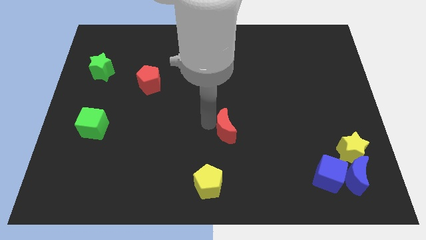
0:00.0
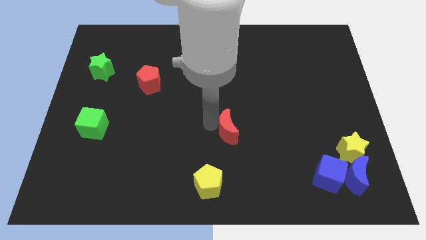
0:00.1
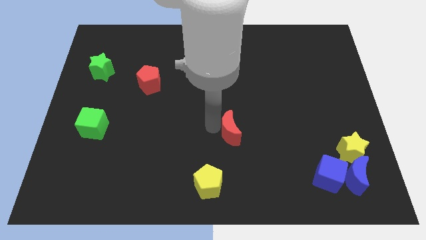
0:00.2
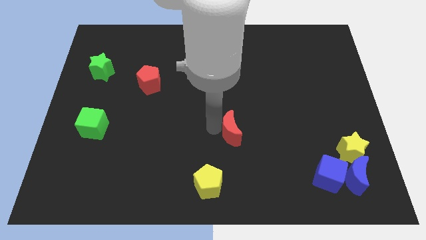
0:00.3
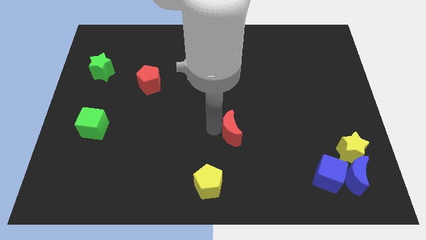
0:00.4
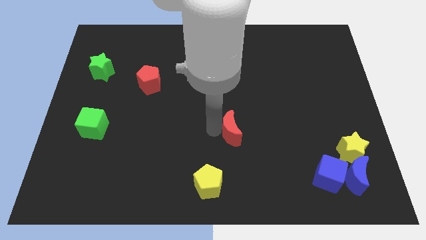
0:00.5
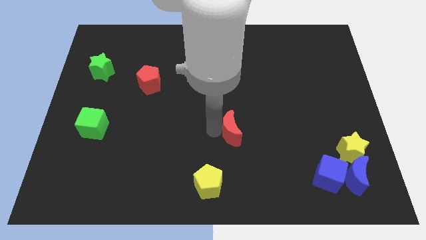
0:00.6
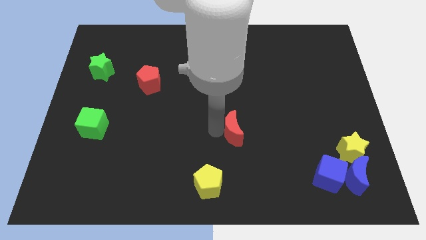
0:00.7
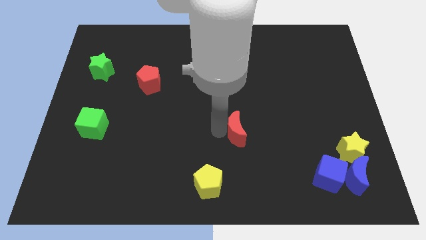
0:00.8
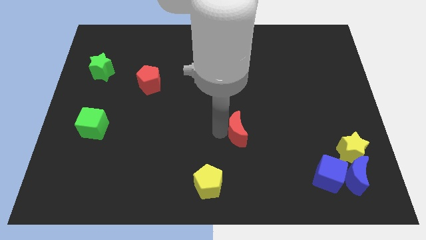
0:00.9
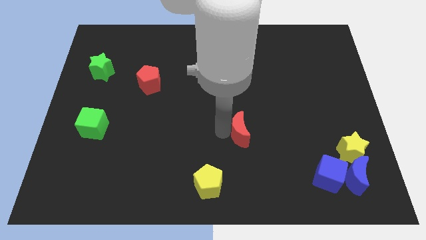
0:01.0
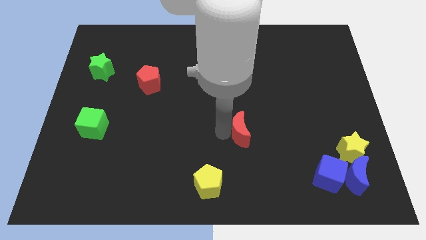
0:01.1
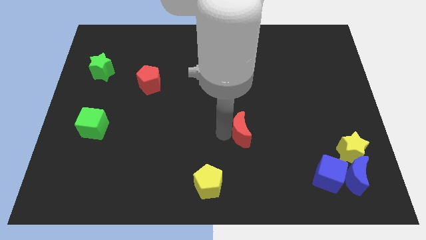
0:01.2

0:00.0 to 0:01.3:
place the red moon diagonally to the yellow pentagon

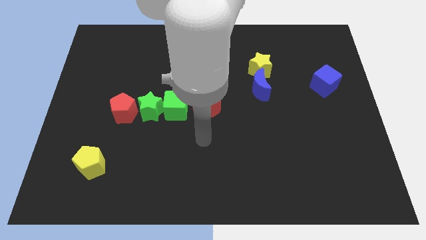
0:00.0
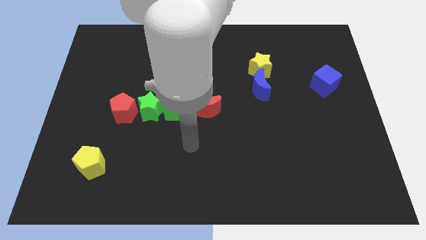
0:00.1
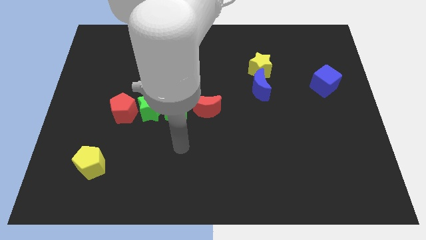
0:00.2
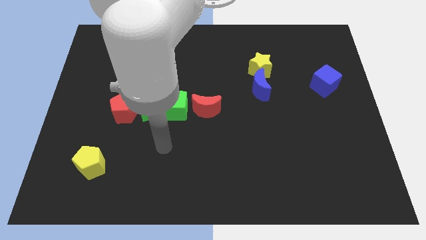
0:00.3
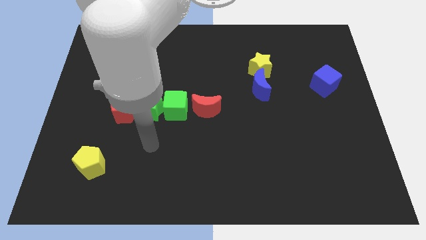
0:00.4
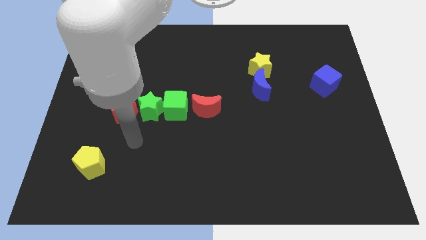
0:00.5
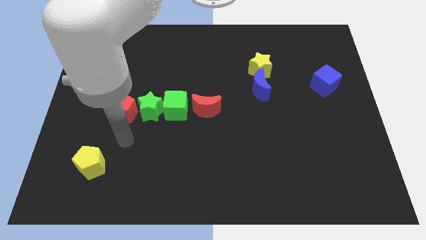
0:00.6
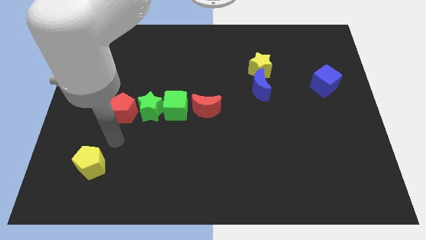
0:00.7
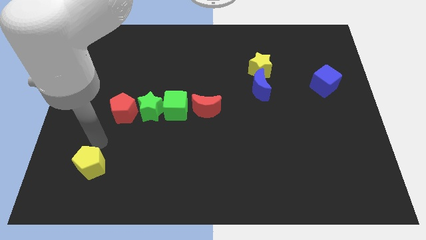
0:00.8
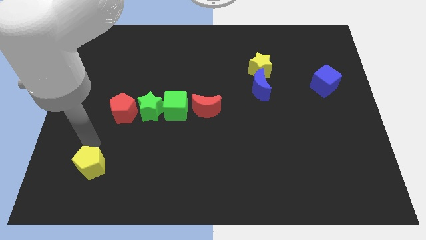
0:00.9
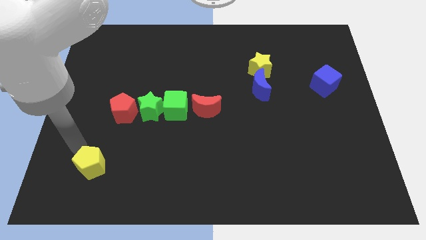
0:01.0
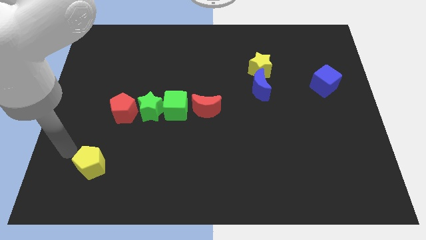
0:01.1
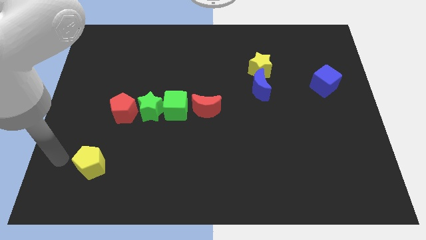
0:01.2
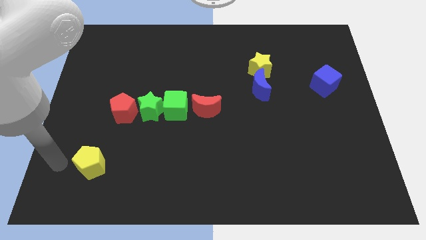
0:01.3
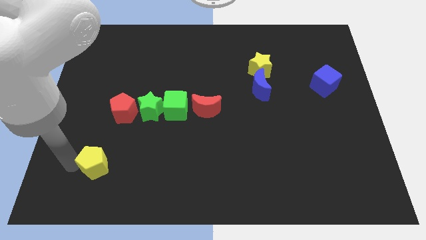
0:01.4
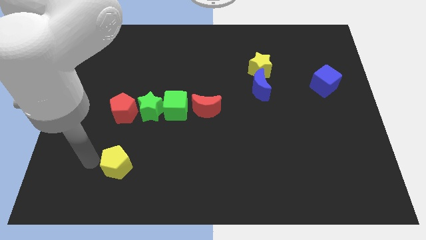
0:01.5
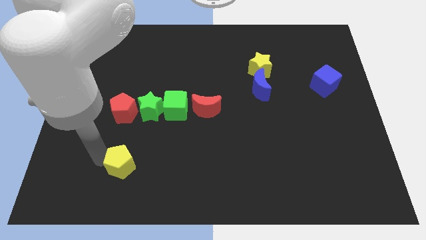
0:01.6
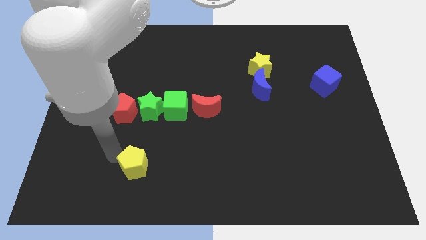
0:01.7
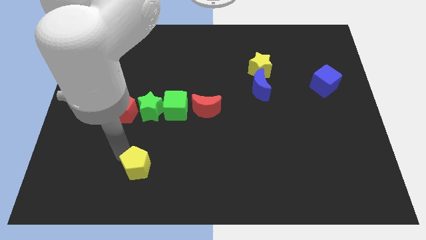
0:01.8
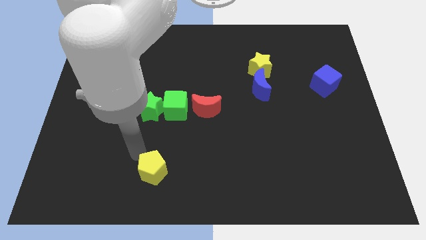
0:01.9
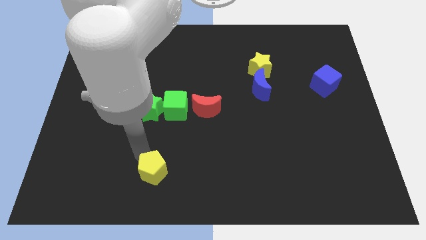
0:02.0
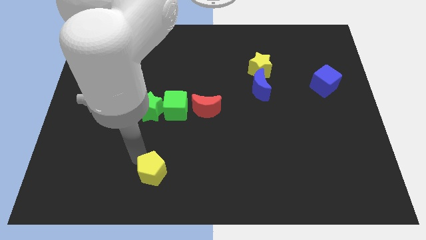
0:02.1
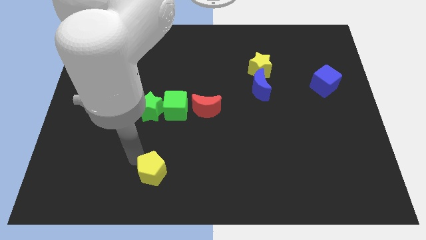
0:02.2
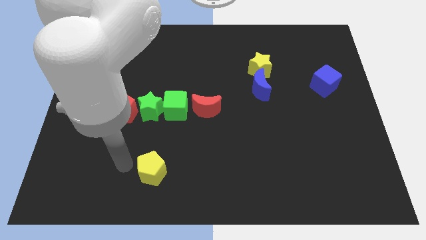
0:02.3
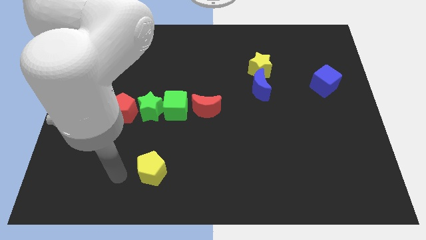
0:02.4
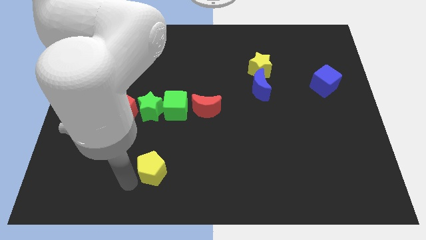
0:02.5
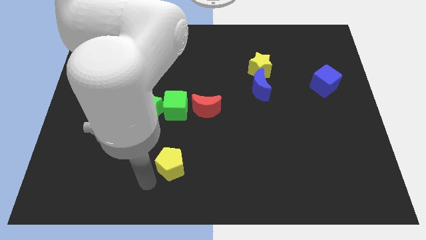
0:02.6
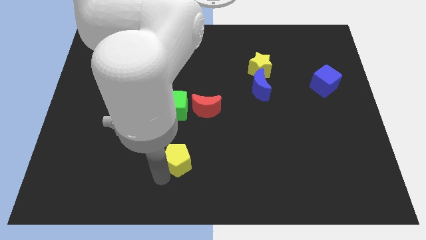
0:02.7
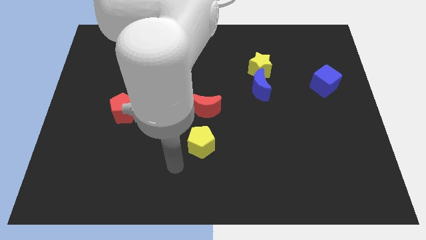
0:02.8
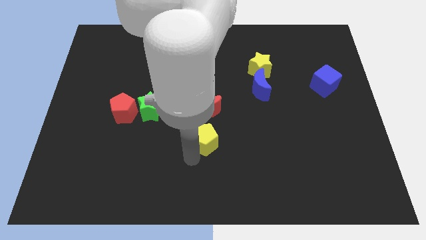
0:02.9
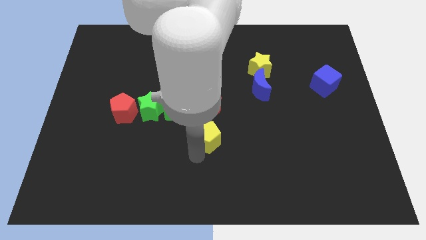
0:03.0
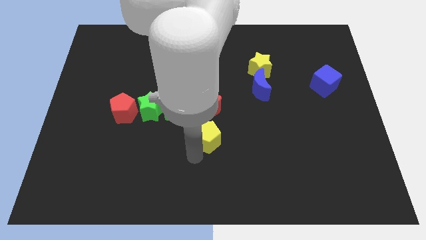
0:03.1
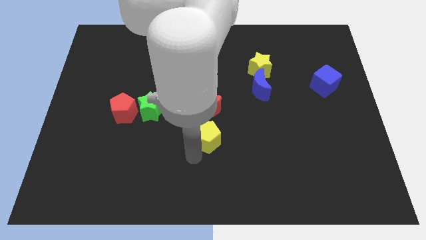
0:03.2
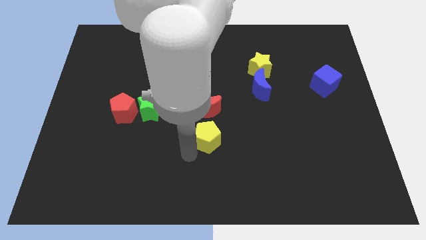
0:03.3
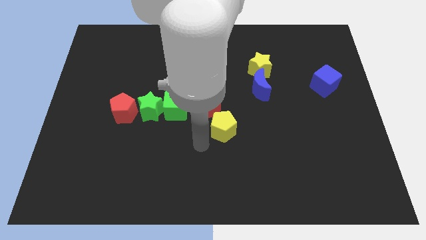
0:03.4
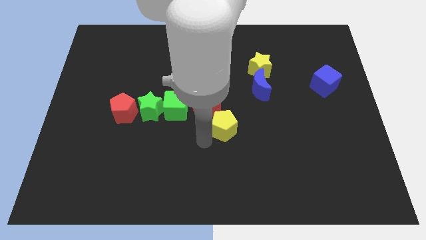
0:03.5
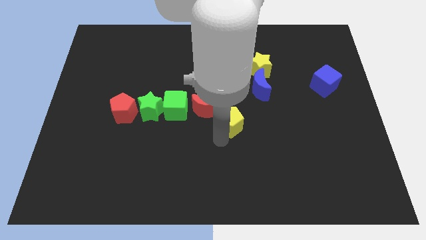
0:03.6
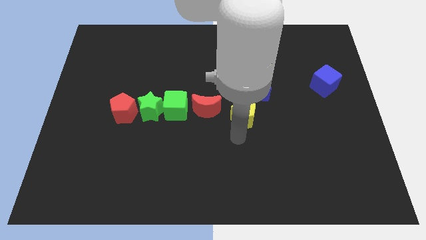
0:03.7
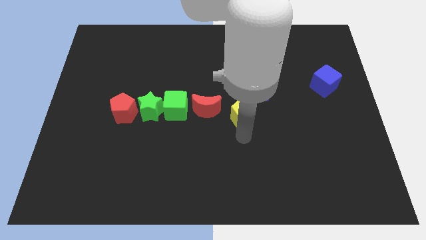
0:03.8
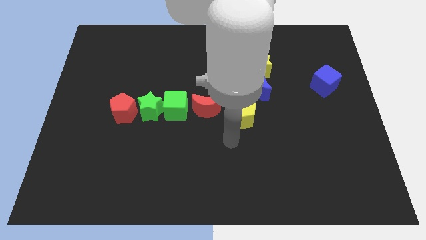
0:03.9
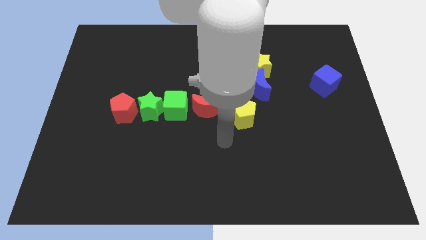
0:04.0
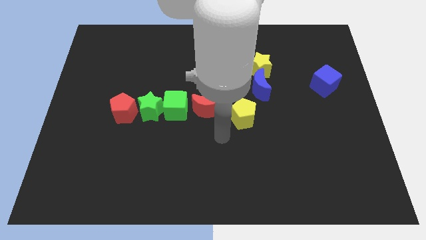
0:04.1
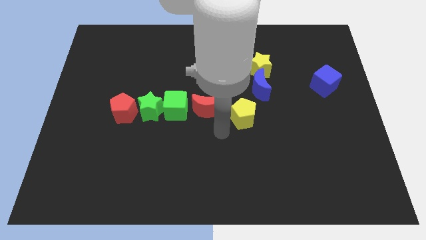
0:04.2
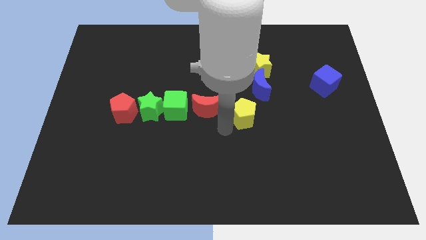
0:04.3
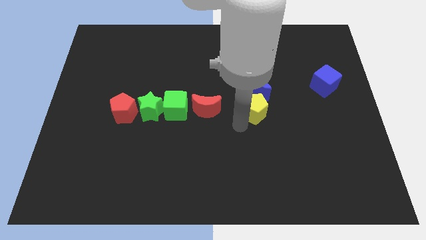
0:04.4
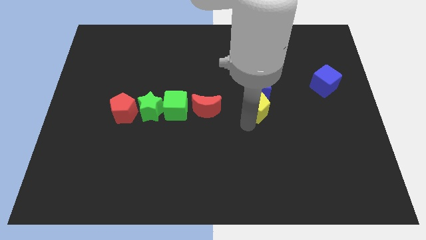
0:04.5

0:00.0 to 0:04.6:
place yellow pentagon below the blue moon

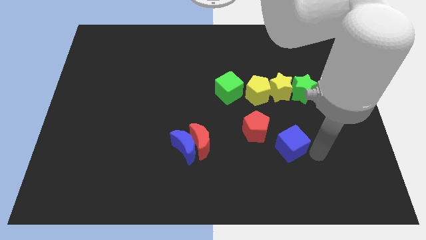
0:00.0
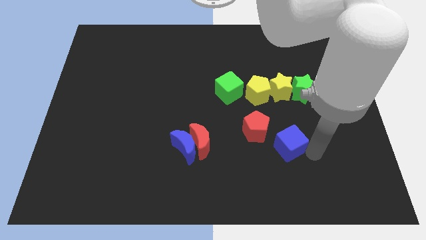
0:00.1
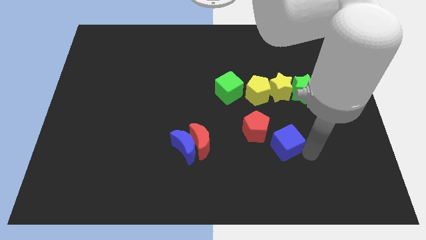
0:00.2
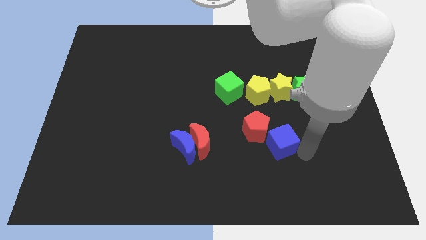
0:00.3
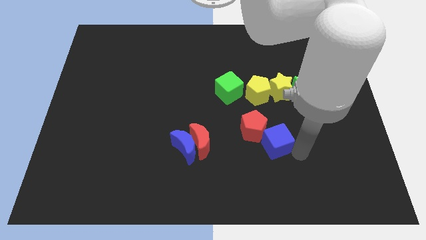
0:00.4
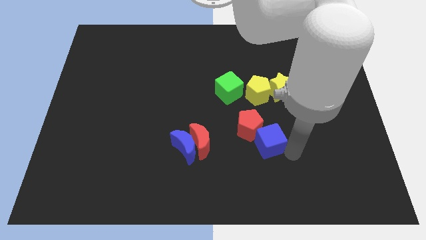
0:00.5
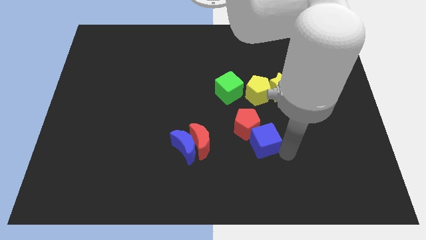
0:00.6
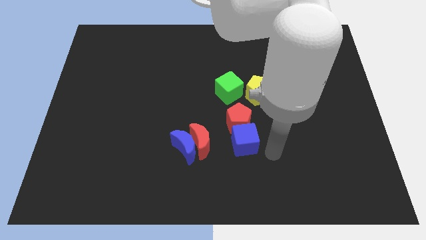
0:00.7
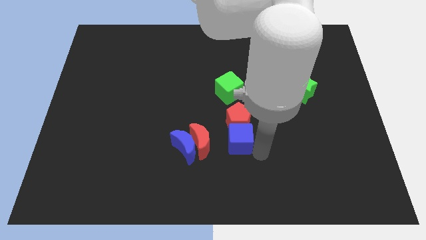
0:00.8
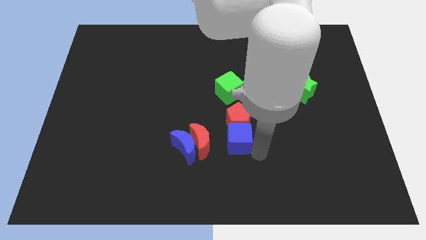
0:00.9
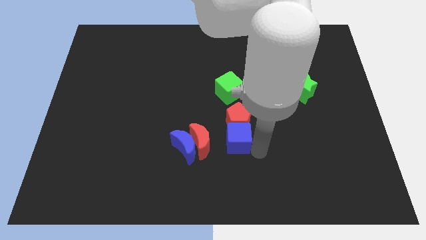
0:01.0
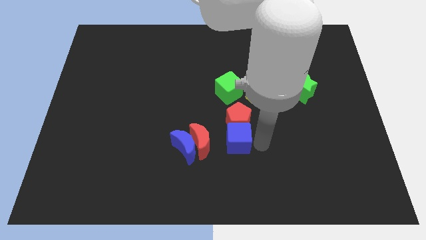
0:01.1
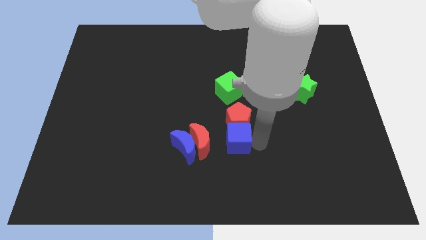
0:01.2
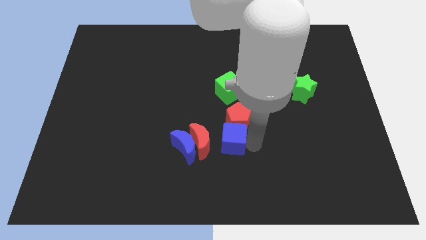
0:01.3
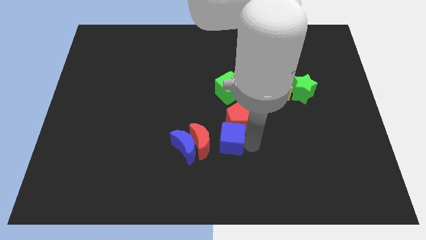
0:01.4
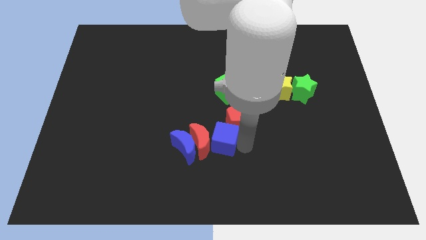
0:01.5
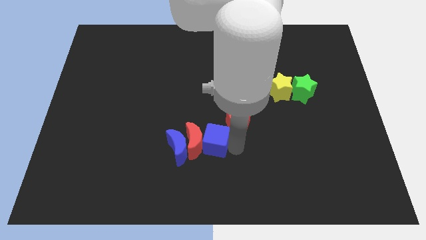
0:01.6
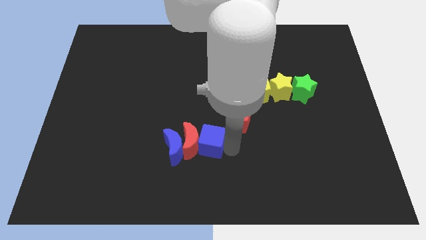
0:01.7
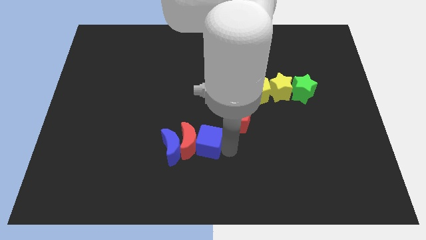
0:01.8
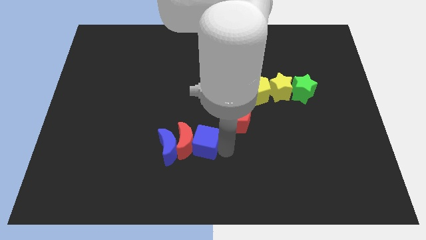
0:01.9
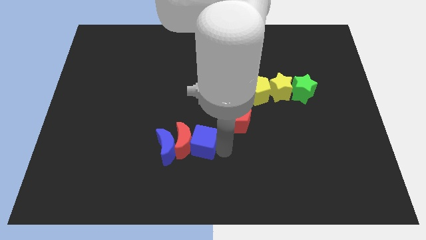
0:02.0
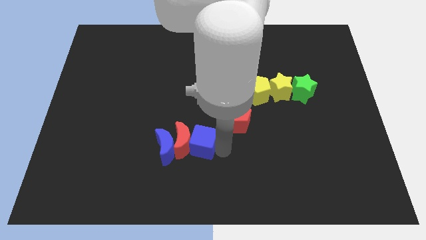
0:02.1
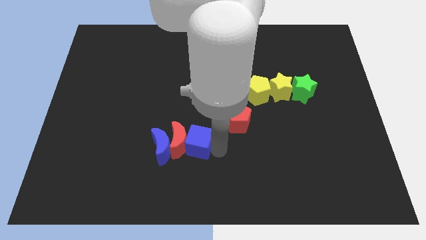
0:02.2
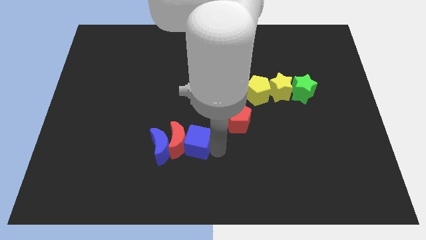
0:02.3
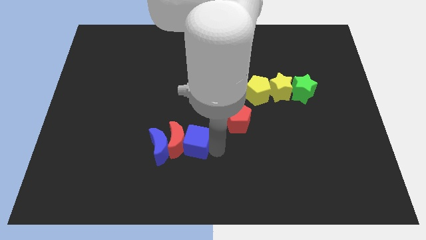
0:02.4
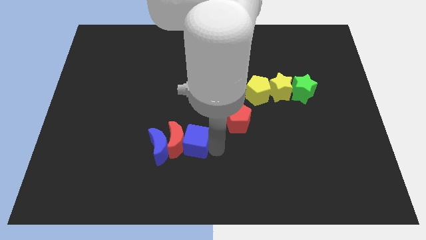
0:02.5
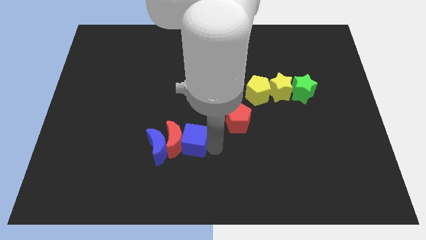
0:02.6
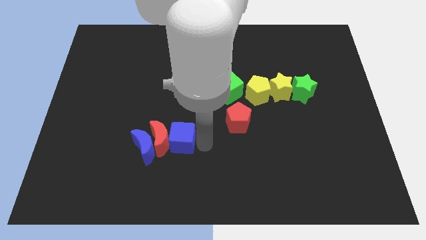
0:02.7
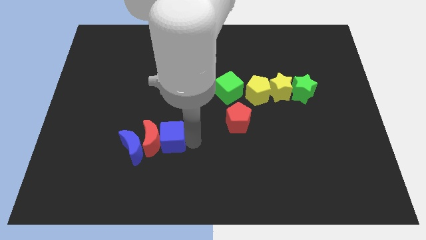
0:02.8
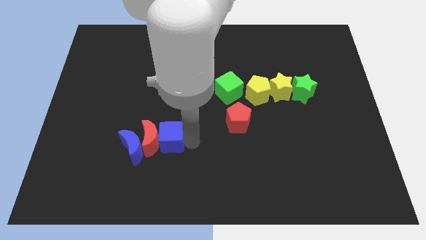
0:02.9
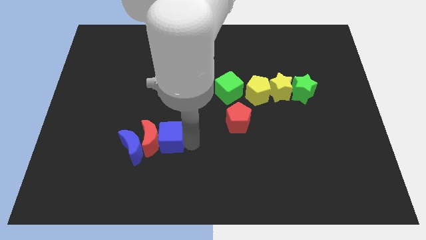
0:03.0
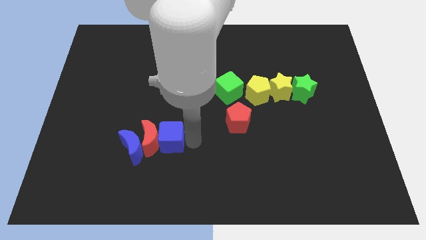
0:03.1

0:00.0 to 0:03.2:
push the blue cube into the red moon
